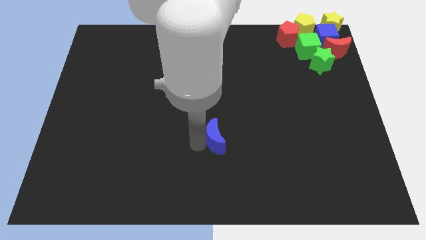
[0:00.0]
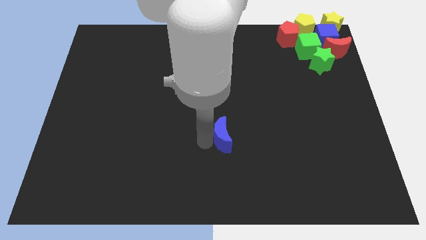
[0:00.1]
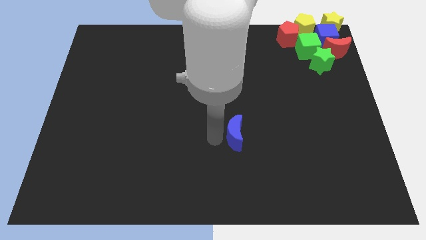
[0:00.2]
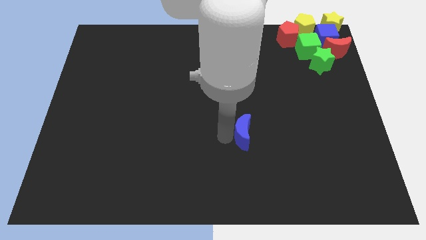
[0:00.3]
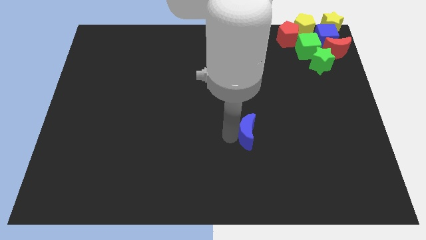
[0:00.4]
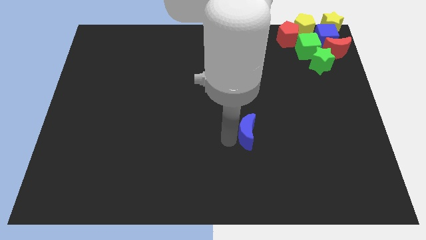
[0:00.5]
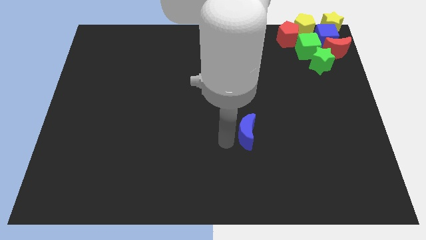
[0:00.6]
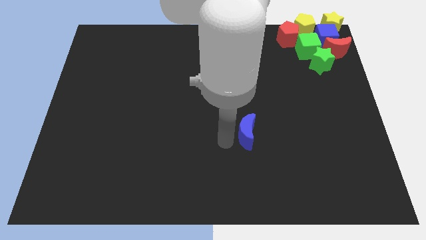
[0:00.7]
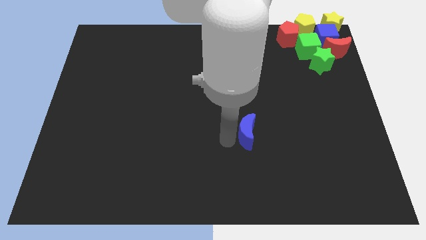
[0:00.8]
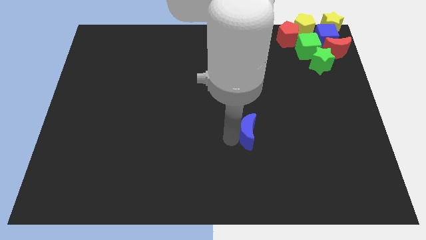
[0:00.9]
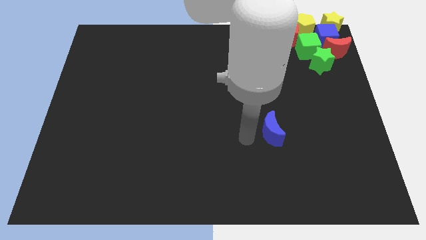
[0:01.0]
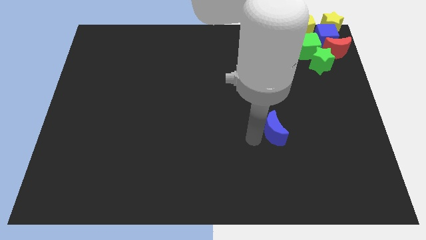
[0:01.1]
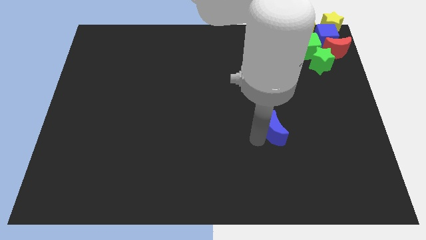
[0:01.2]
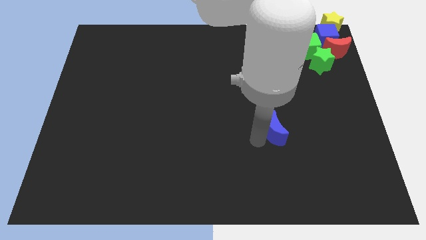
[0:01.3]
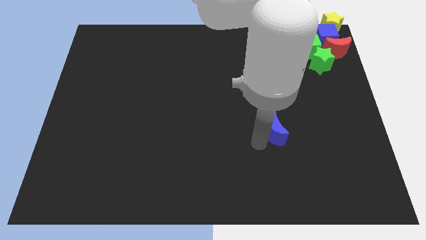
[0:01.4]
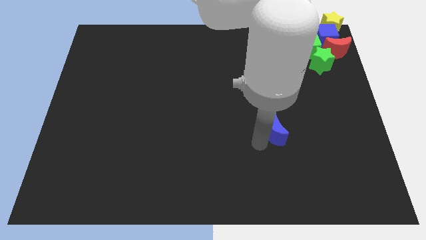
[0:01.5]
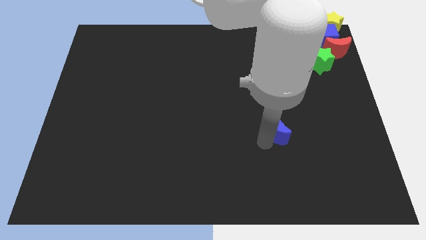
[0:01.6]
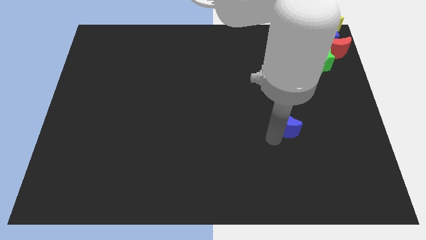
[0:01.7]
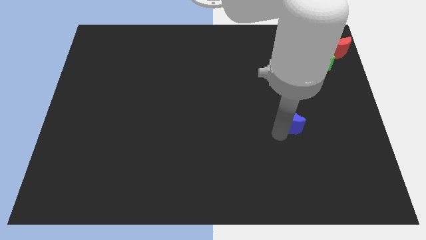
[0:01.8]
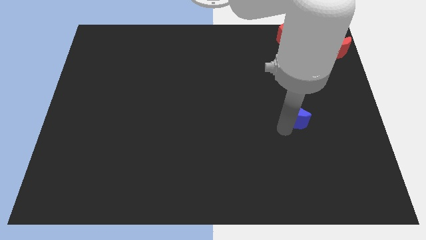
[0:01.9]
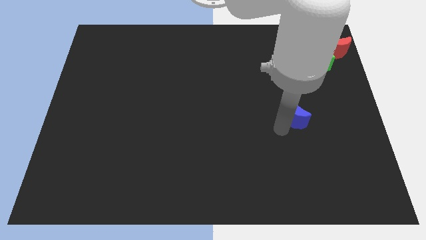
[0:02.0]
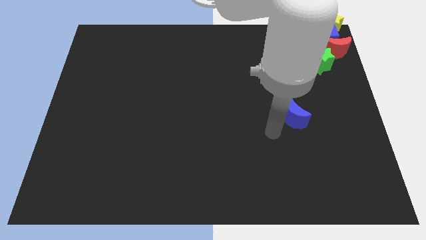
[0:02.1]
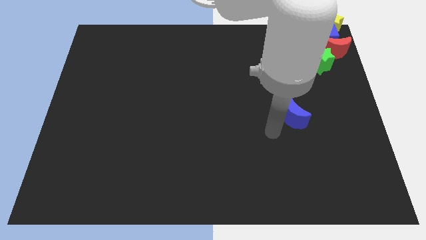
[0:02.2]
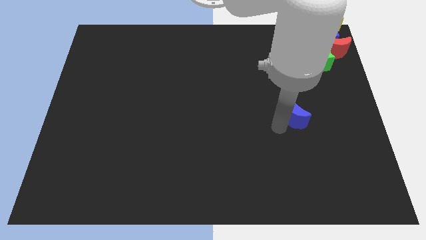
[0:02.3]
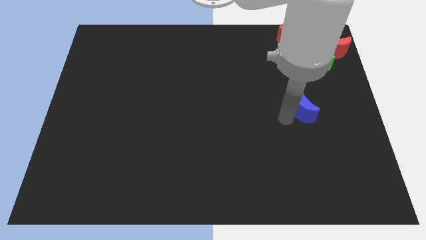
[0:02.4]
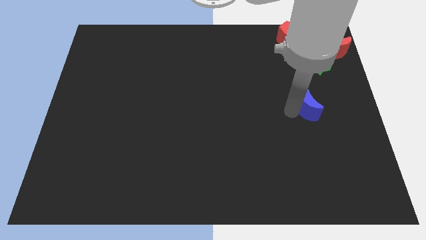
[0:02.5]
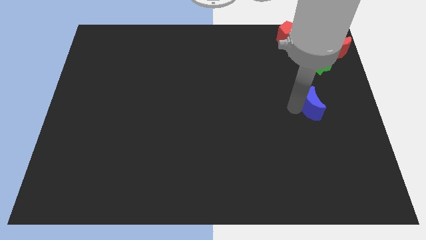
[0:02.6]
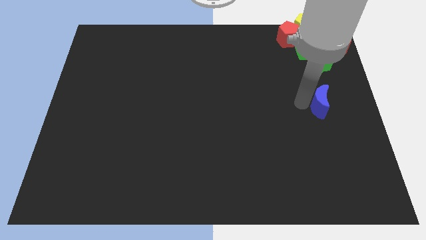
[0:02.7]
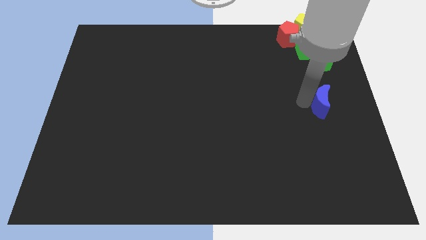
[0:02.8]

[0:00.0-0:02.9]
place the blue moon to the center right

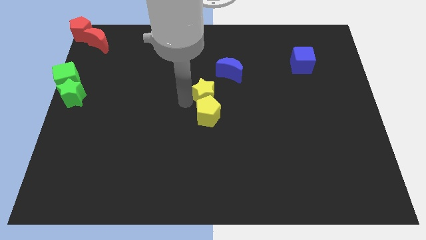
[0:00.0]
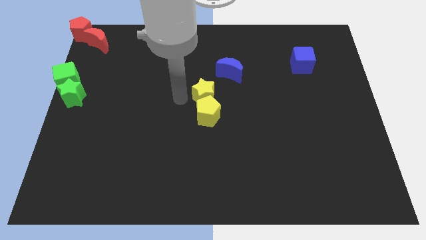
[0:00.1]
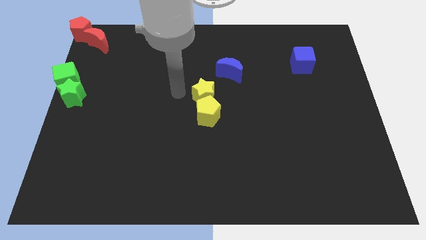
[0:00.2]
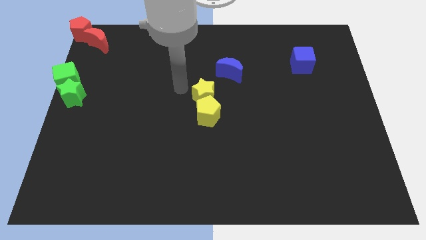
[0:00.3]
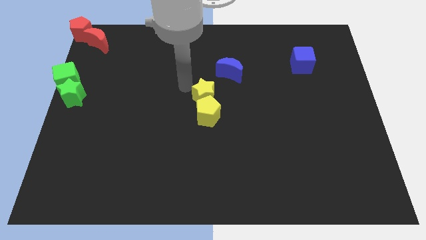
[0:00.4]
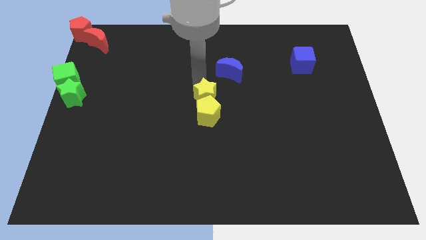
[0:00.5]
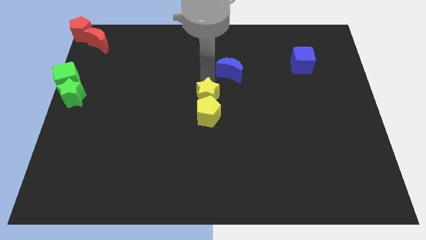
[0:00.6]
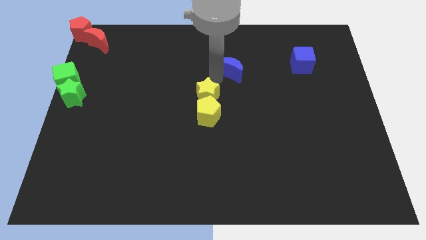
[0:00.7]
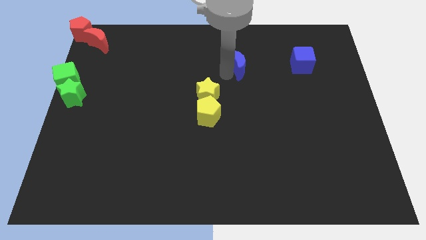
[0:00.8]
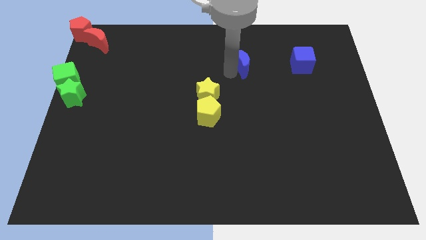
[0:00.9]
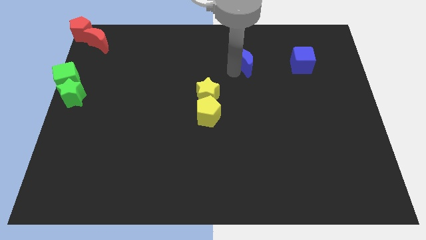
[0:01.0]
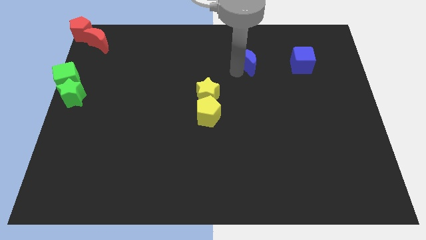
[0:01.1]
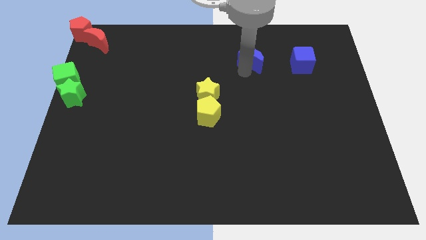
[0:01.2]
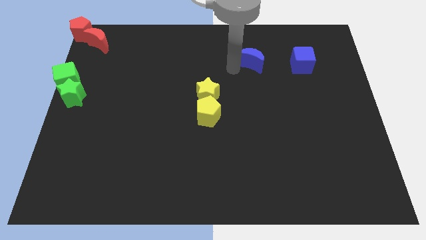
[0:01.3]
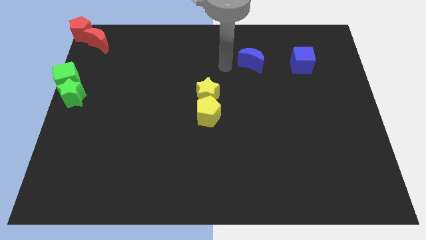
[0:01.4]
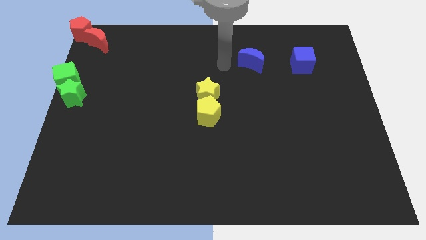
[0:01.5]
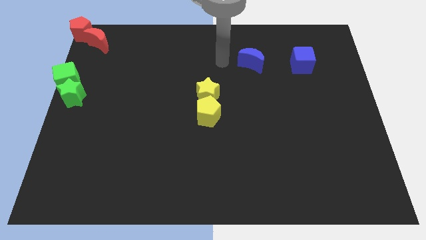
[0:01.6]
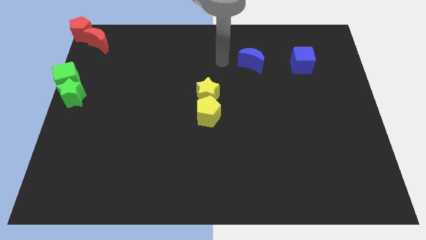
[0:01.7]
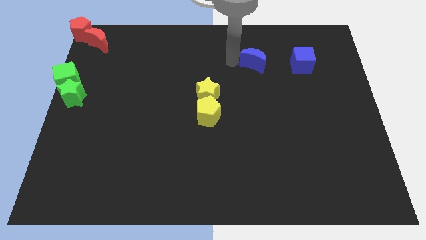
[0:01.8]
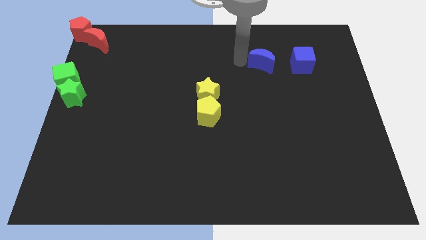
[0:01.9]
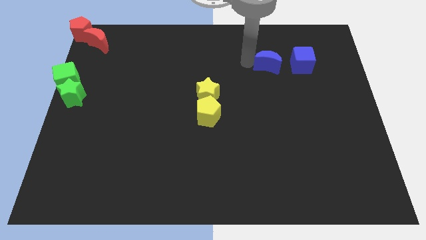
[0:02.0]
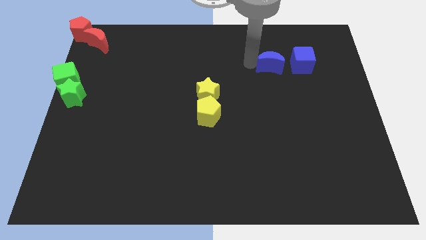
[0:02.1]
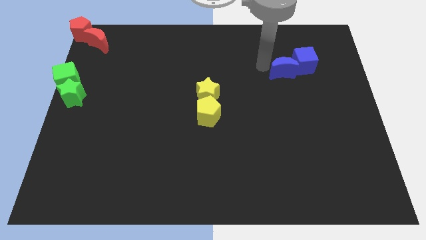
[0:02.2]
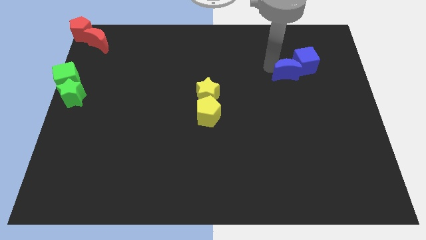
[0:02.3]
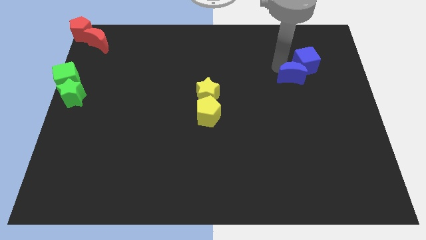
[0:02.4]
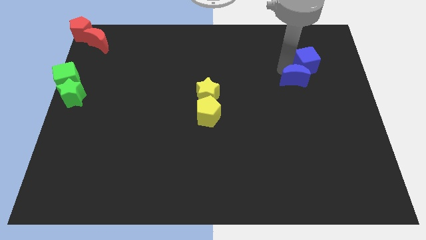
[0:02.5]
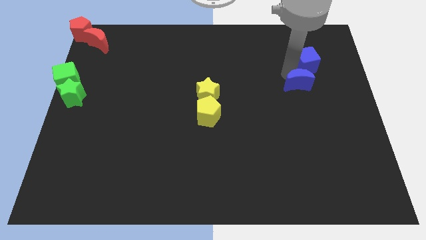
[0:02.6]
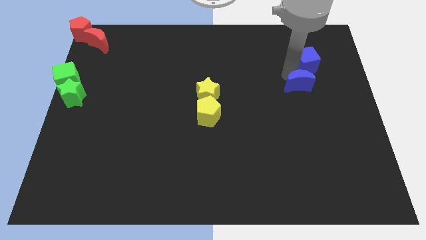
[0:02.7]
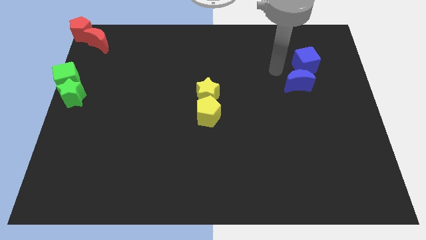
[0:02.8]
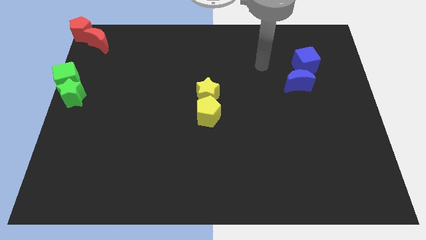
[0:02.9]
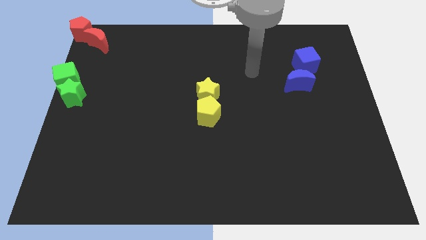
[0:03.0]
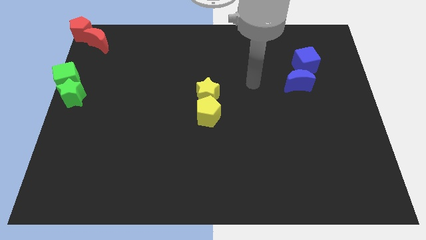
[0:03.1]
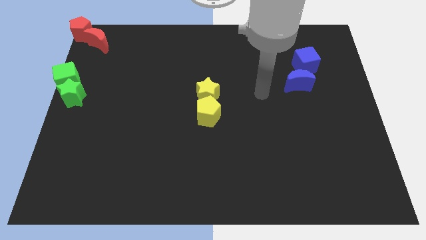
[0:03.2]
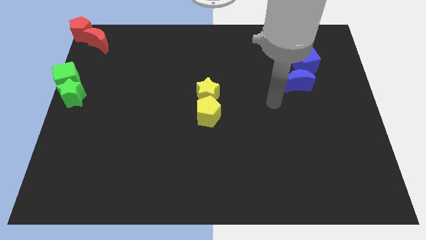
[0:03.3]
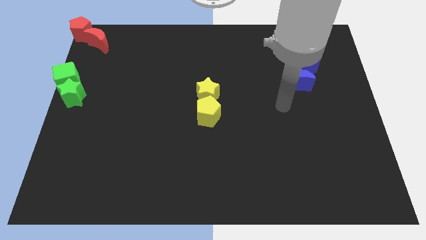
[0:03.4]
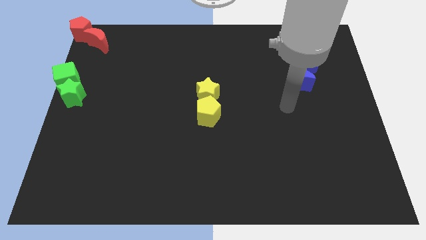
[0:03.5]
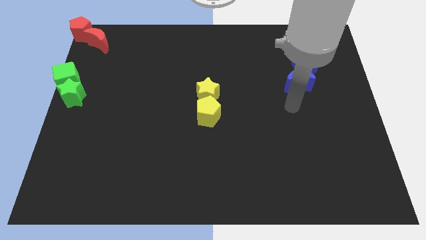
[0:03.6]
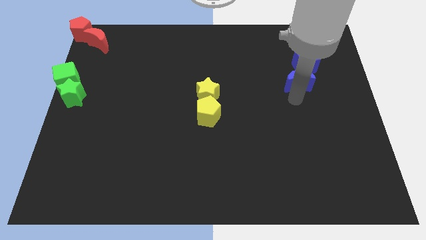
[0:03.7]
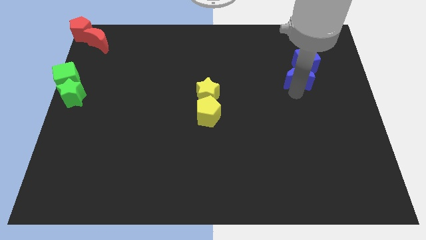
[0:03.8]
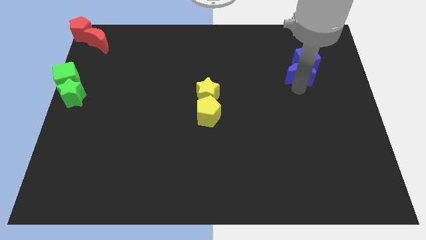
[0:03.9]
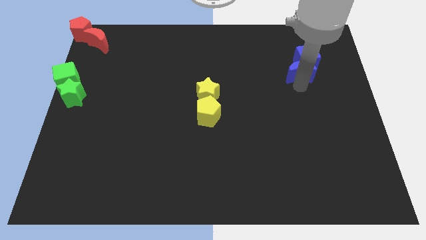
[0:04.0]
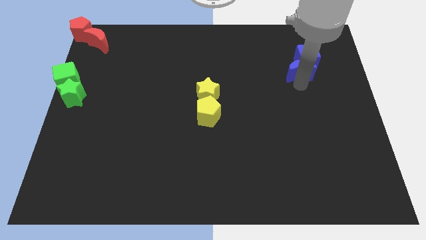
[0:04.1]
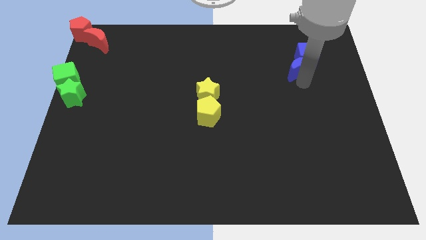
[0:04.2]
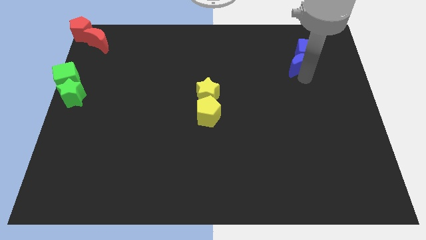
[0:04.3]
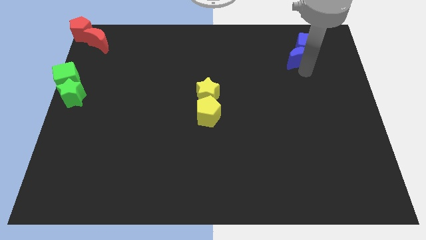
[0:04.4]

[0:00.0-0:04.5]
push the blue crescent into the blue cube

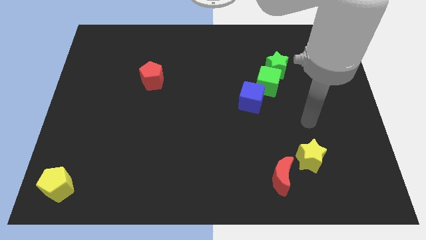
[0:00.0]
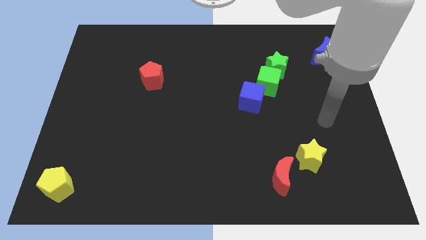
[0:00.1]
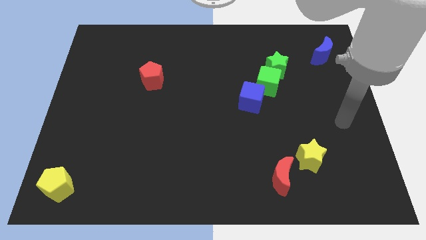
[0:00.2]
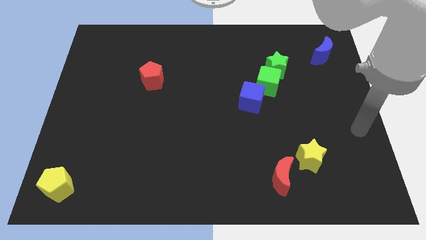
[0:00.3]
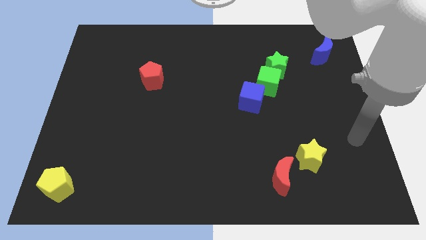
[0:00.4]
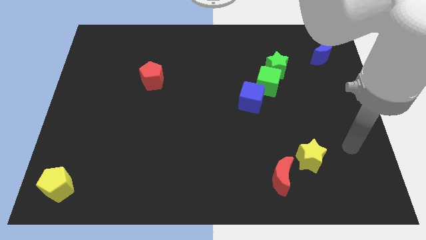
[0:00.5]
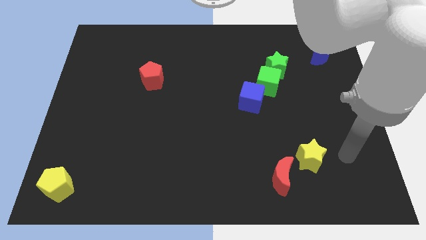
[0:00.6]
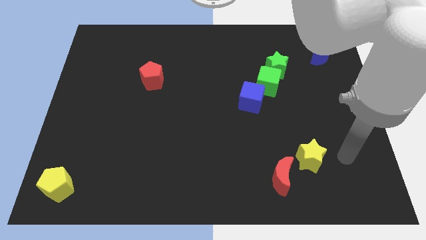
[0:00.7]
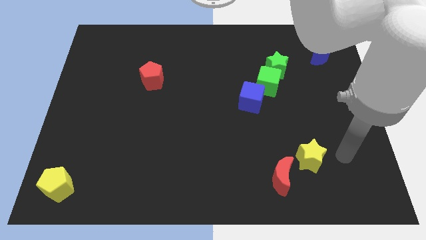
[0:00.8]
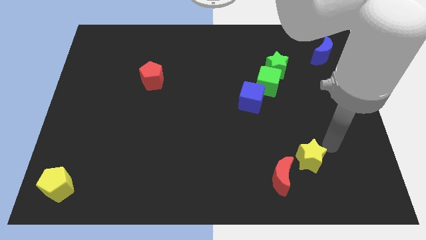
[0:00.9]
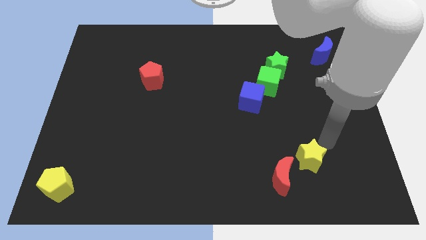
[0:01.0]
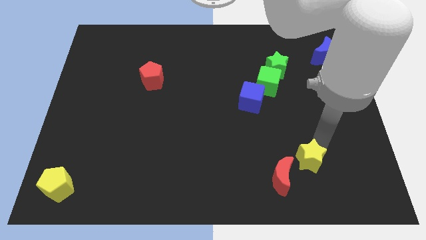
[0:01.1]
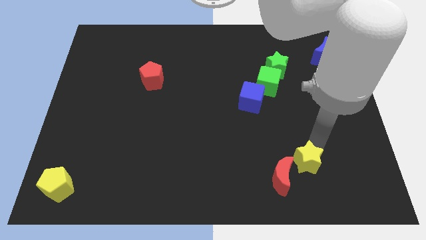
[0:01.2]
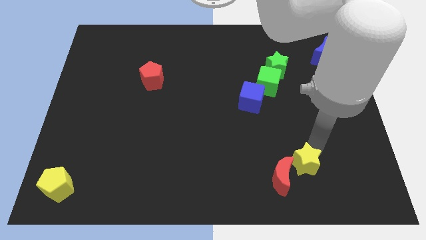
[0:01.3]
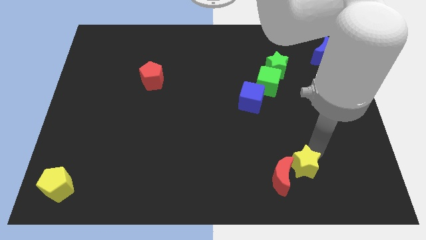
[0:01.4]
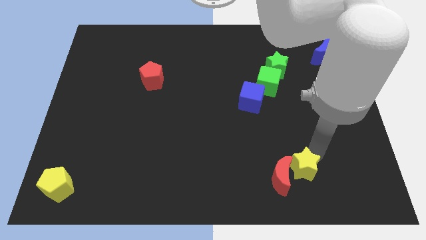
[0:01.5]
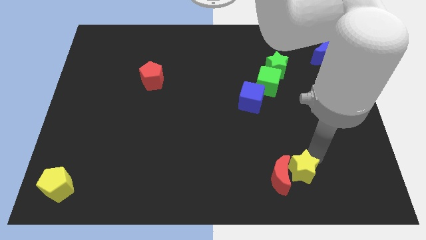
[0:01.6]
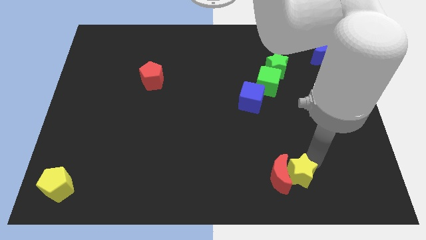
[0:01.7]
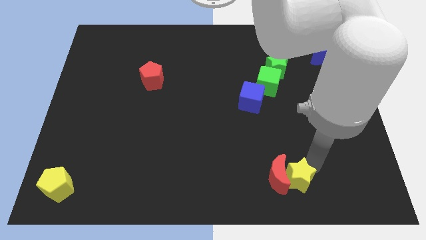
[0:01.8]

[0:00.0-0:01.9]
slide the yellow star into the right side of the red crescent
